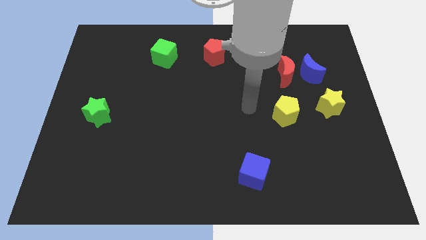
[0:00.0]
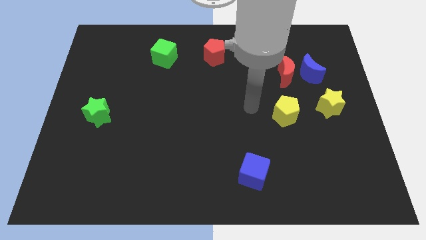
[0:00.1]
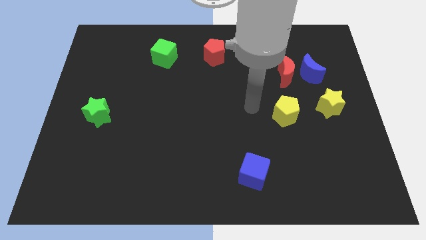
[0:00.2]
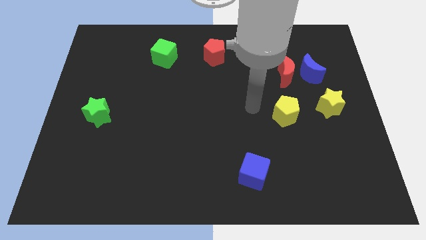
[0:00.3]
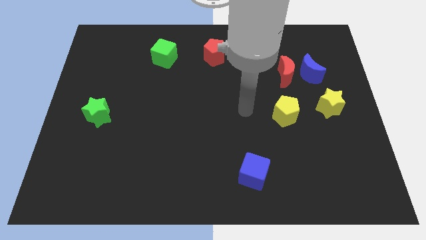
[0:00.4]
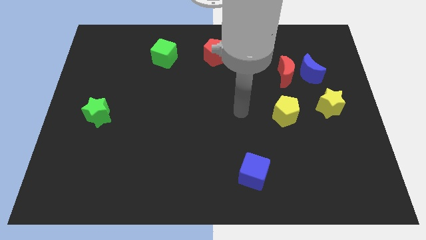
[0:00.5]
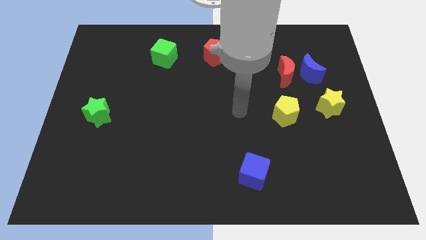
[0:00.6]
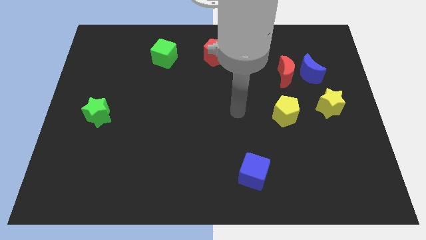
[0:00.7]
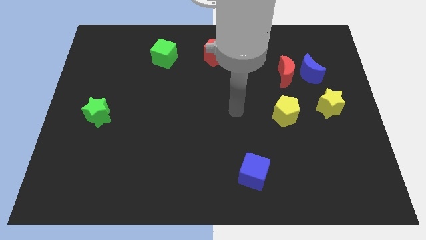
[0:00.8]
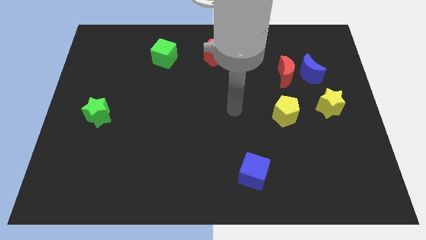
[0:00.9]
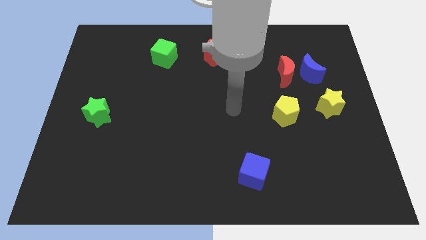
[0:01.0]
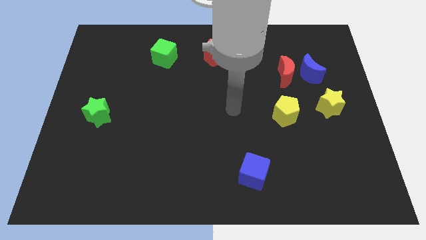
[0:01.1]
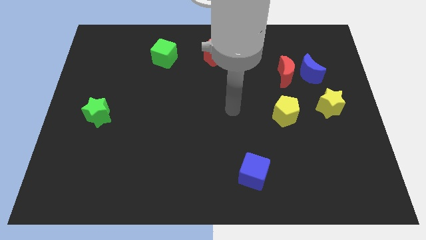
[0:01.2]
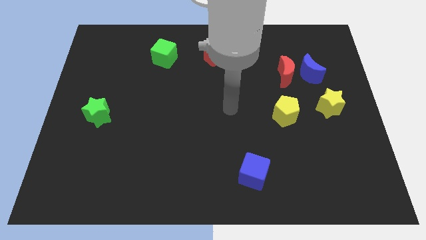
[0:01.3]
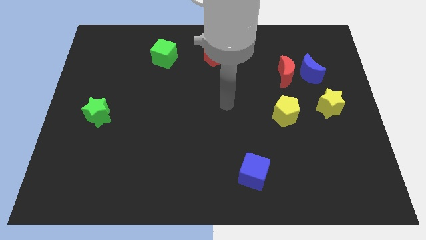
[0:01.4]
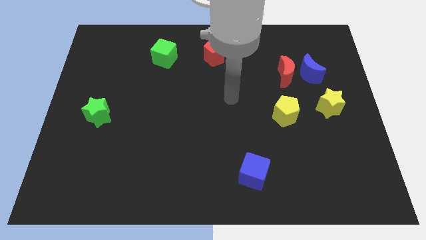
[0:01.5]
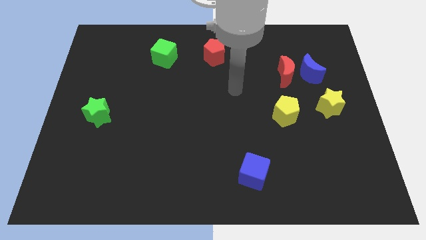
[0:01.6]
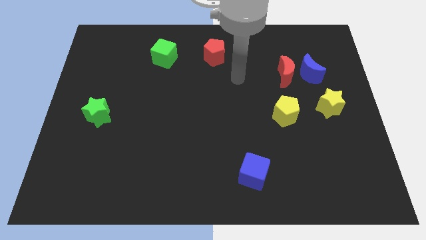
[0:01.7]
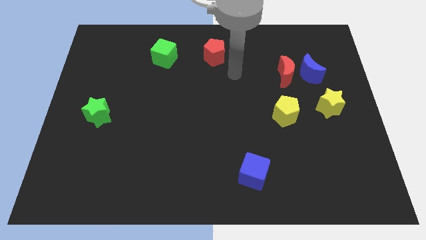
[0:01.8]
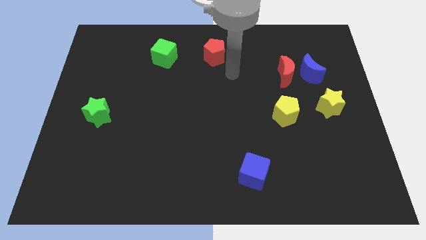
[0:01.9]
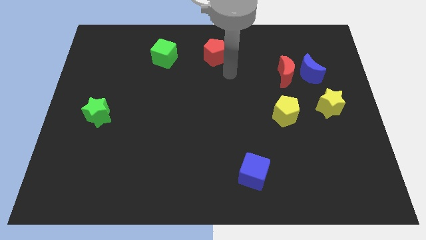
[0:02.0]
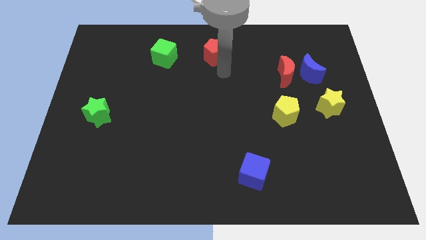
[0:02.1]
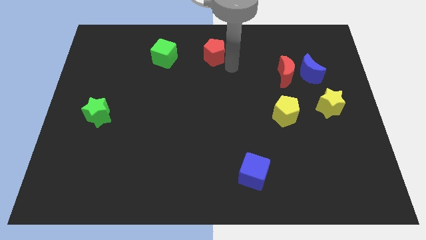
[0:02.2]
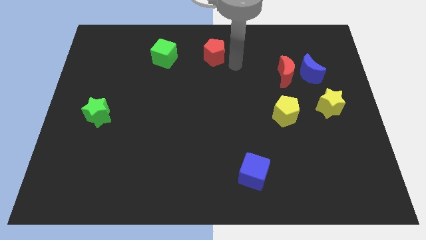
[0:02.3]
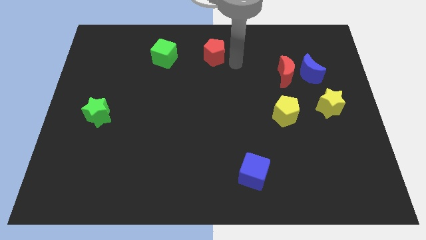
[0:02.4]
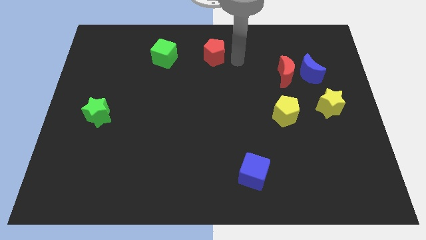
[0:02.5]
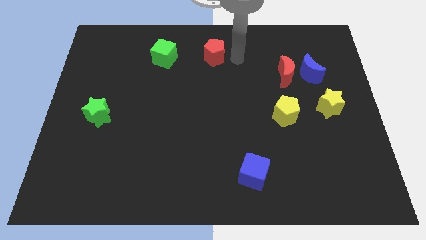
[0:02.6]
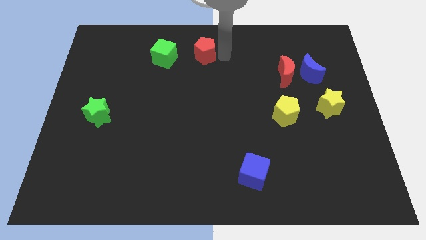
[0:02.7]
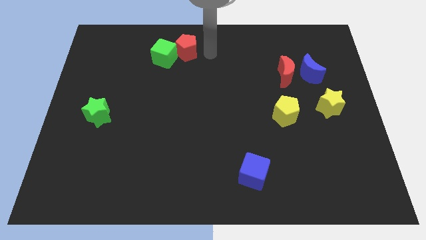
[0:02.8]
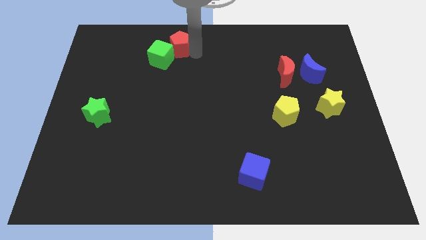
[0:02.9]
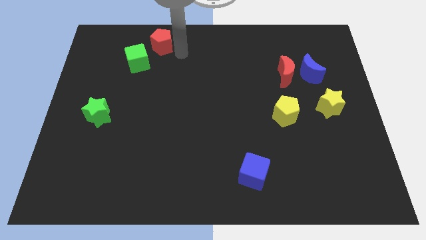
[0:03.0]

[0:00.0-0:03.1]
push red pentagon to the top of the board

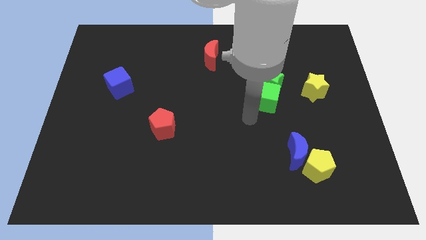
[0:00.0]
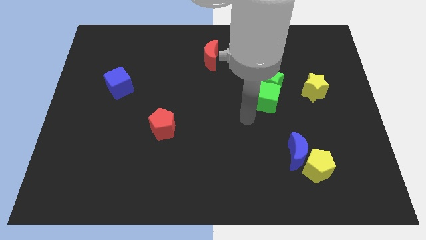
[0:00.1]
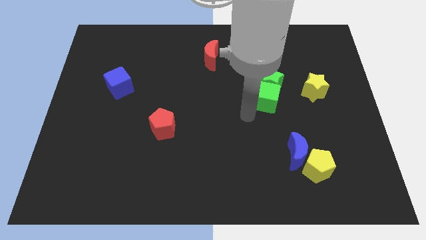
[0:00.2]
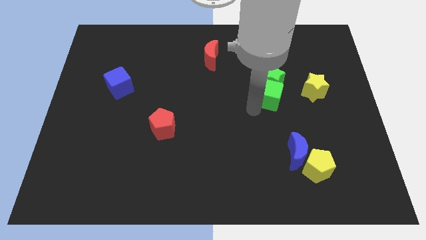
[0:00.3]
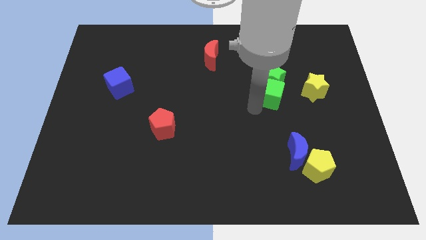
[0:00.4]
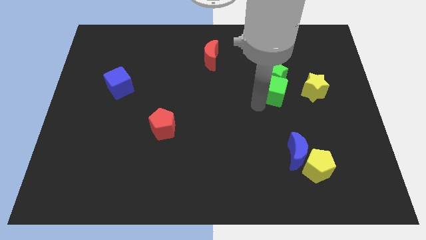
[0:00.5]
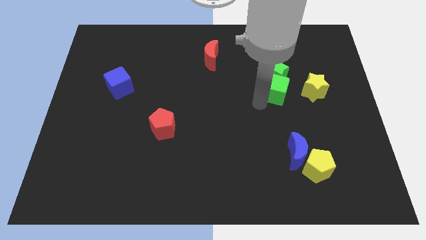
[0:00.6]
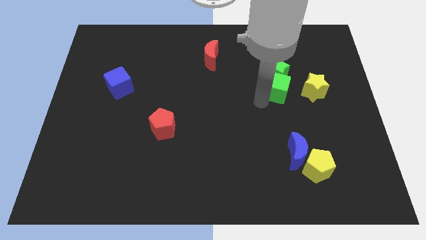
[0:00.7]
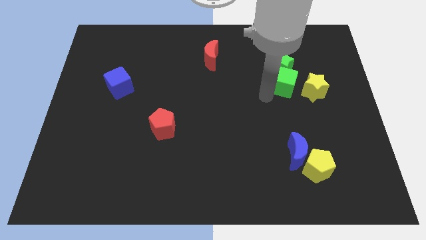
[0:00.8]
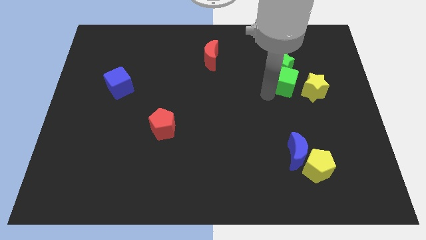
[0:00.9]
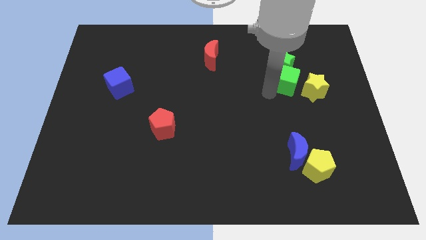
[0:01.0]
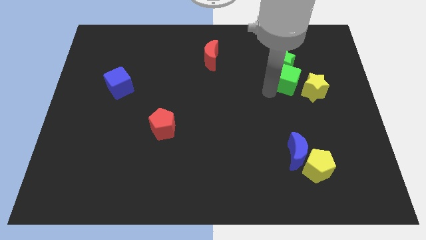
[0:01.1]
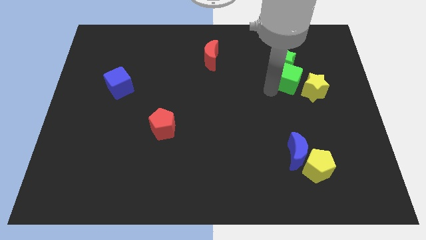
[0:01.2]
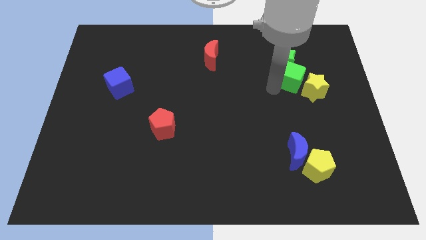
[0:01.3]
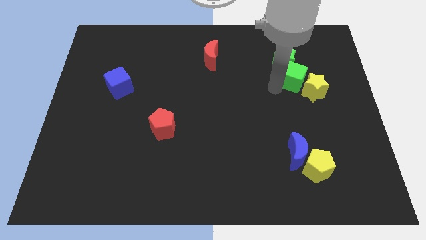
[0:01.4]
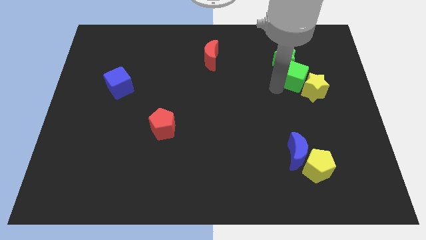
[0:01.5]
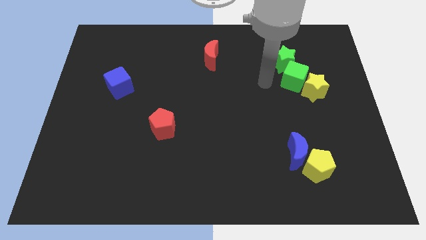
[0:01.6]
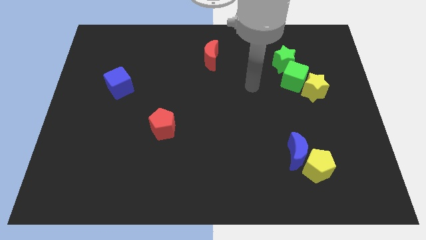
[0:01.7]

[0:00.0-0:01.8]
move the green cube close to the yellow star

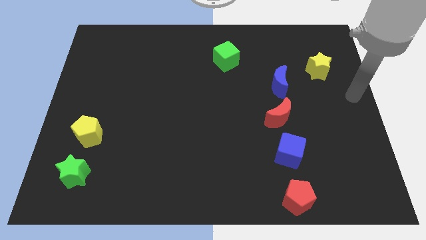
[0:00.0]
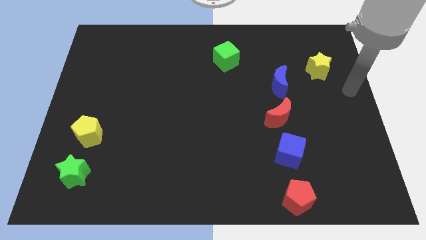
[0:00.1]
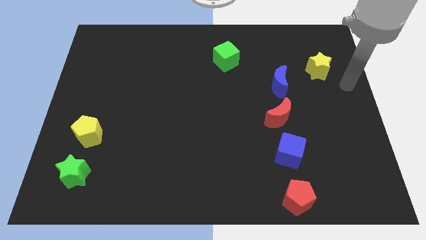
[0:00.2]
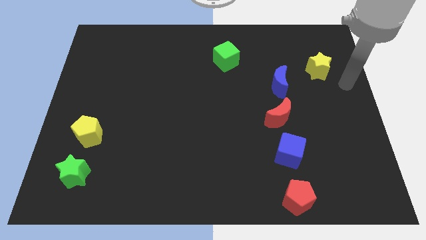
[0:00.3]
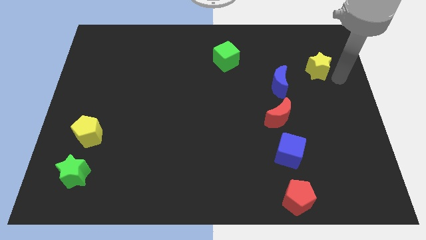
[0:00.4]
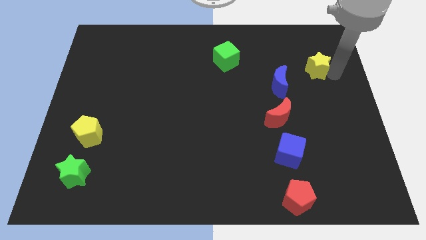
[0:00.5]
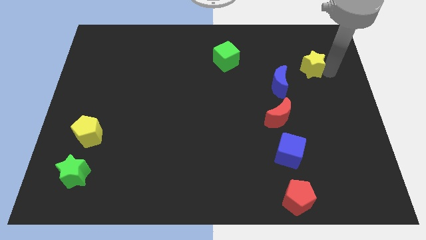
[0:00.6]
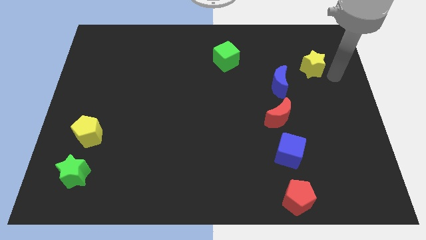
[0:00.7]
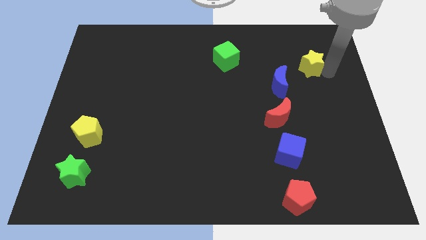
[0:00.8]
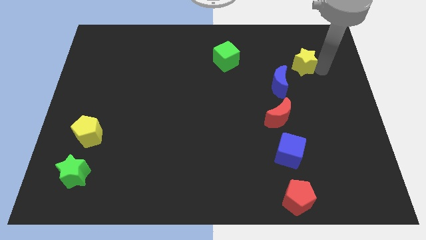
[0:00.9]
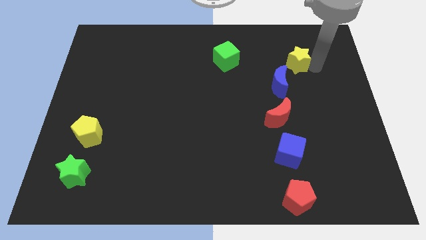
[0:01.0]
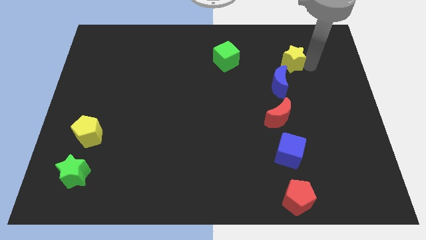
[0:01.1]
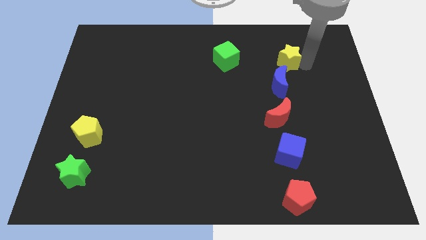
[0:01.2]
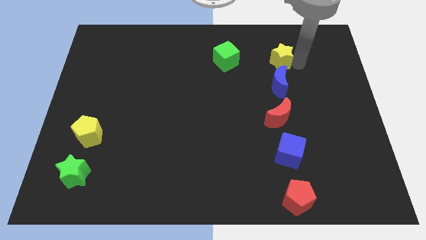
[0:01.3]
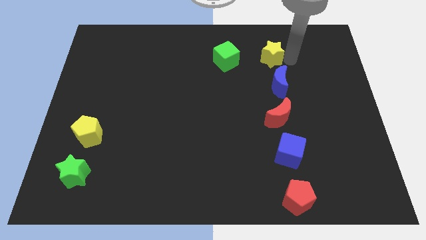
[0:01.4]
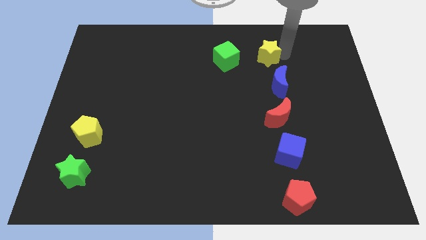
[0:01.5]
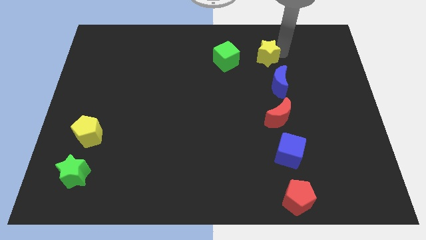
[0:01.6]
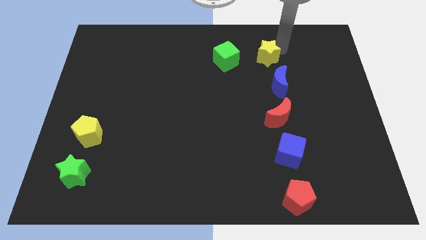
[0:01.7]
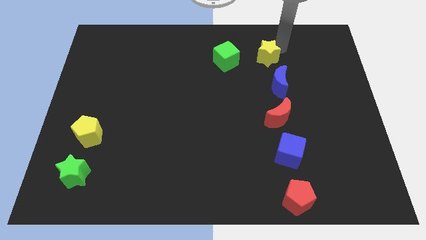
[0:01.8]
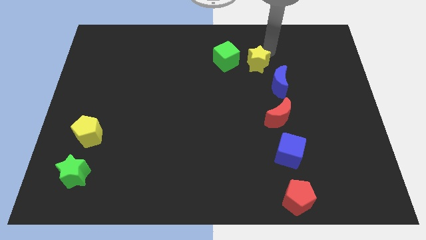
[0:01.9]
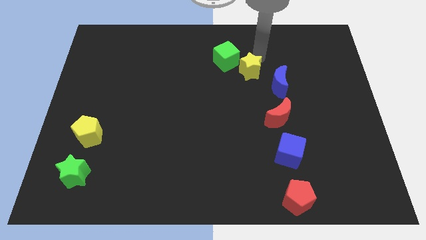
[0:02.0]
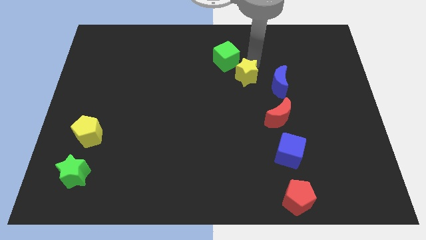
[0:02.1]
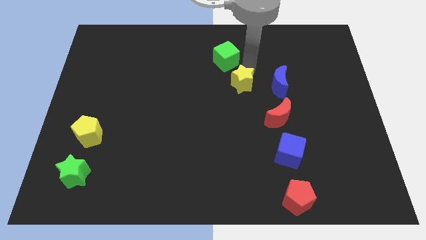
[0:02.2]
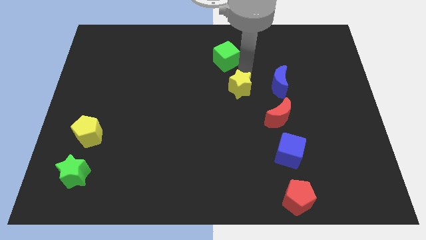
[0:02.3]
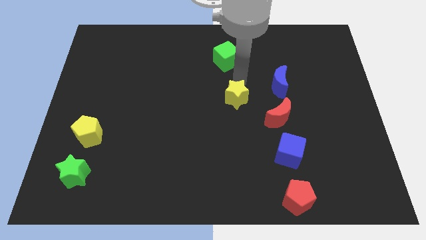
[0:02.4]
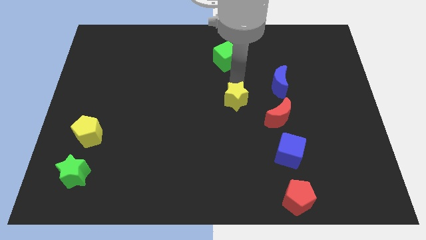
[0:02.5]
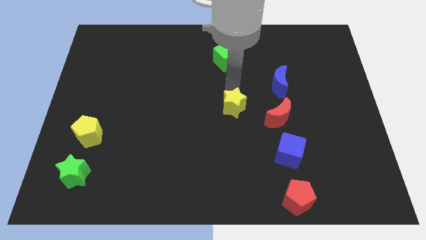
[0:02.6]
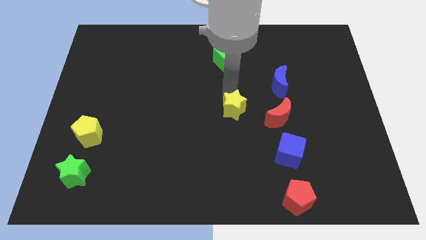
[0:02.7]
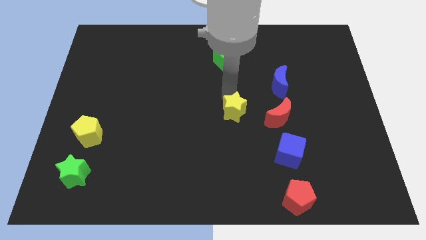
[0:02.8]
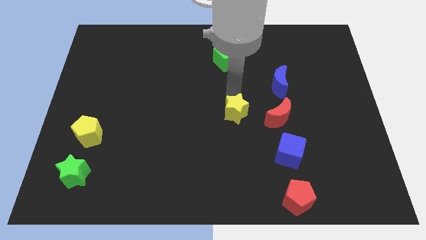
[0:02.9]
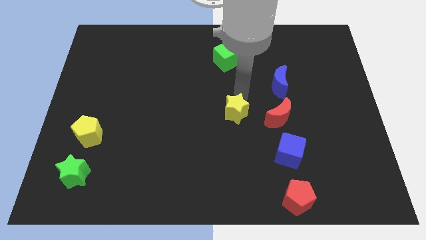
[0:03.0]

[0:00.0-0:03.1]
move the yellow star to the left of the red crescent

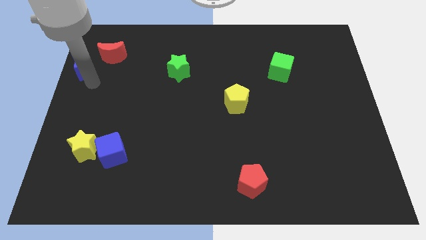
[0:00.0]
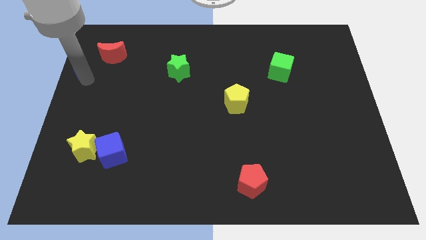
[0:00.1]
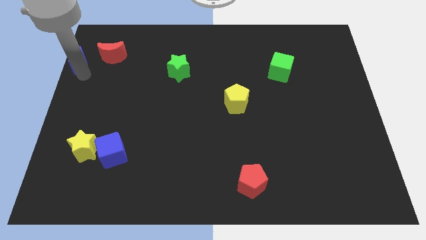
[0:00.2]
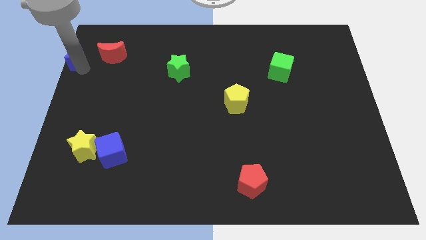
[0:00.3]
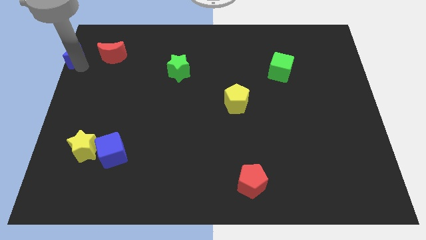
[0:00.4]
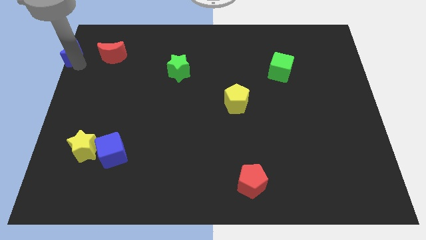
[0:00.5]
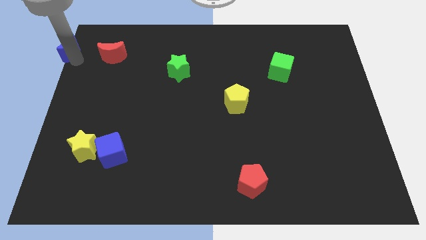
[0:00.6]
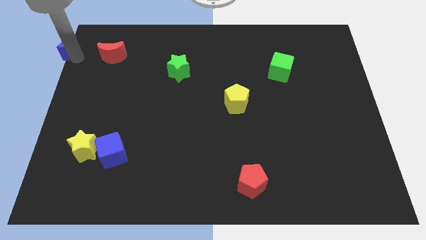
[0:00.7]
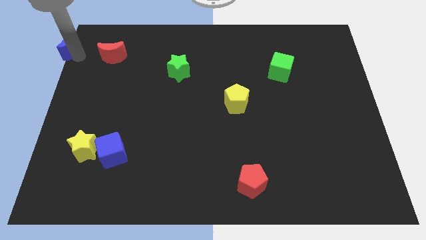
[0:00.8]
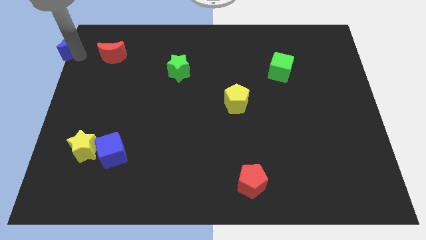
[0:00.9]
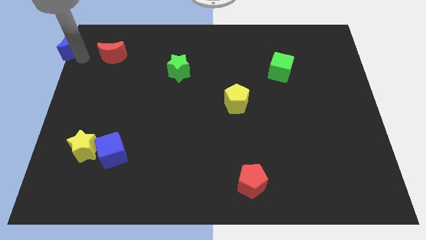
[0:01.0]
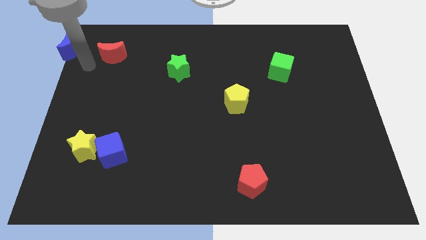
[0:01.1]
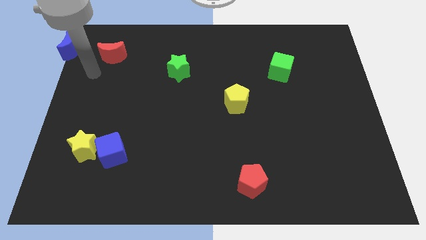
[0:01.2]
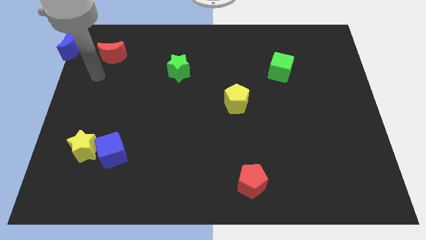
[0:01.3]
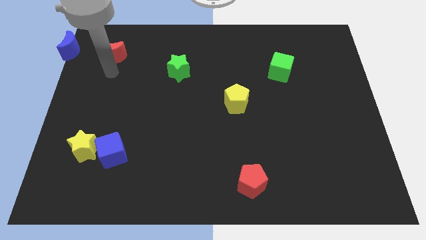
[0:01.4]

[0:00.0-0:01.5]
move the blue crescent to the top left corner of the board
